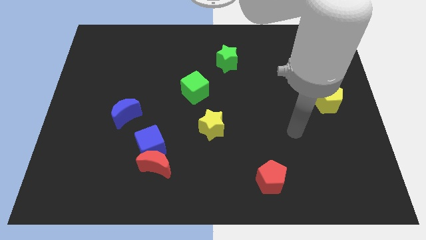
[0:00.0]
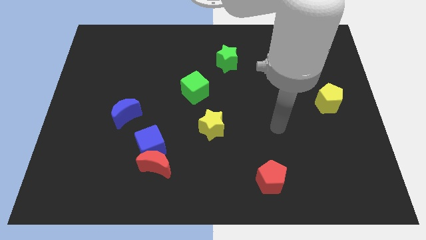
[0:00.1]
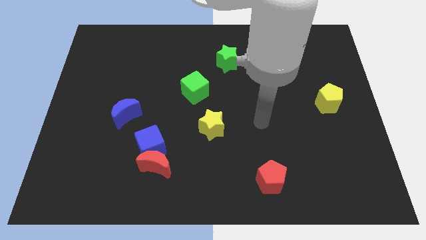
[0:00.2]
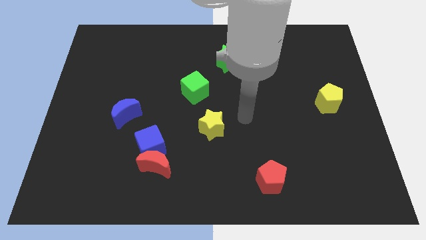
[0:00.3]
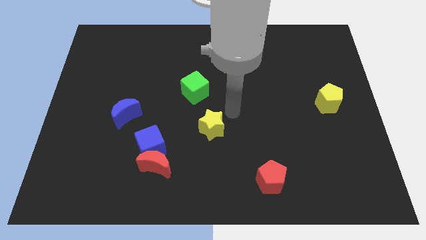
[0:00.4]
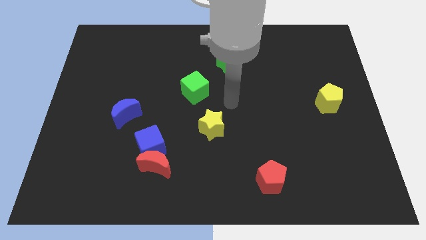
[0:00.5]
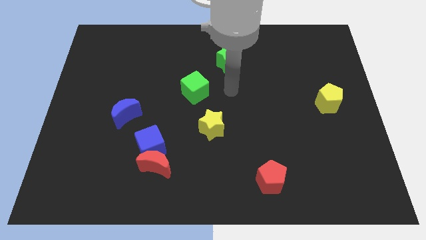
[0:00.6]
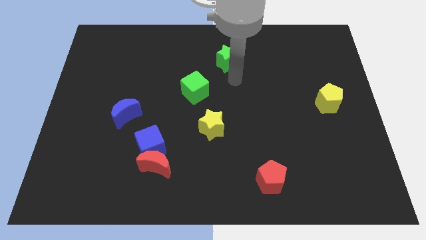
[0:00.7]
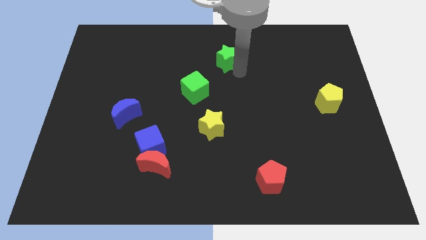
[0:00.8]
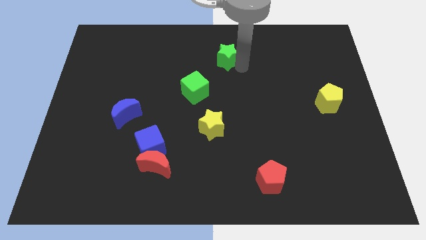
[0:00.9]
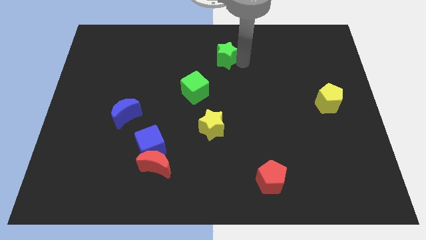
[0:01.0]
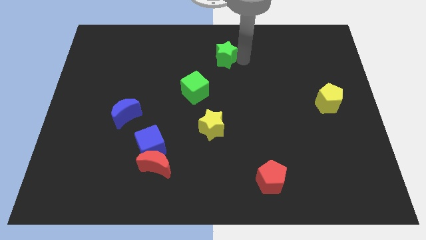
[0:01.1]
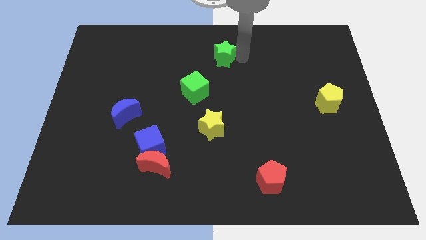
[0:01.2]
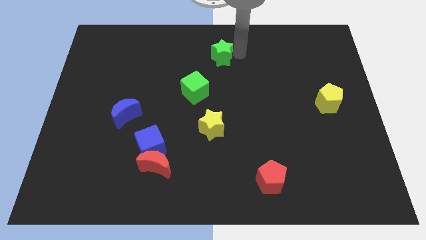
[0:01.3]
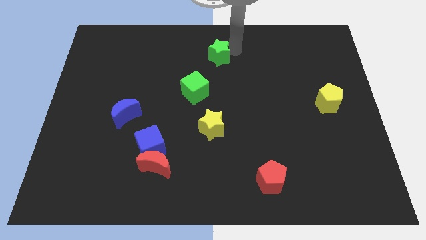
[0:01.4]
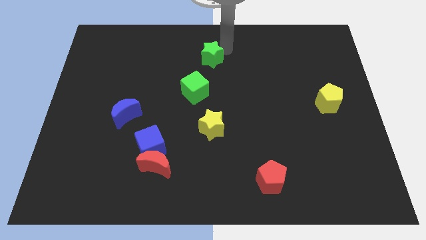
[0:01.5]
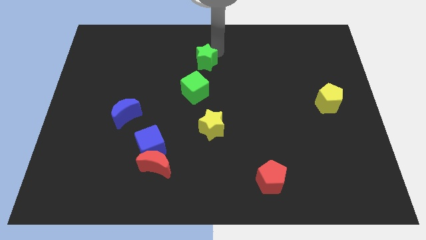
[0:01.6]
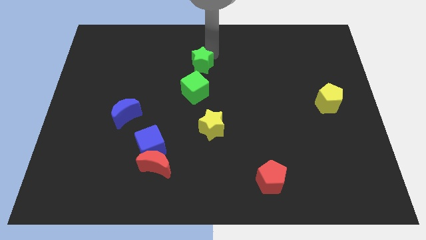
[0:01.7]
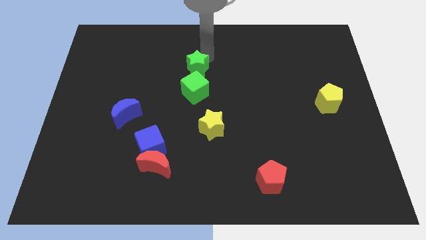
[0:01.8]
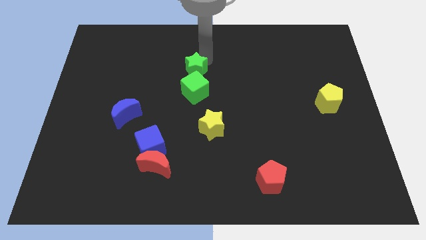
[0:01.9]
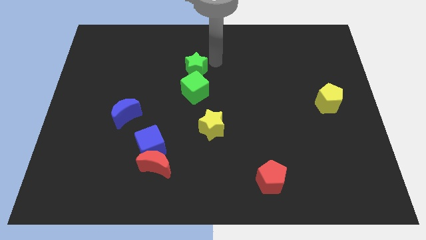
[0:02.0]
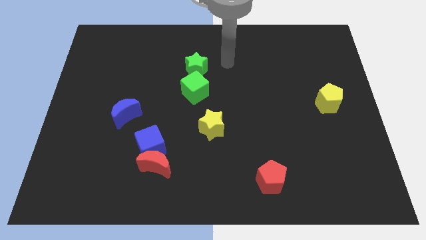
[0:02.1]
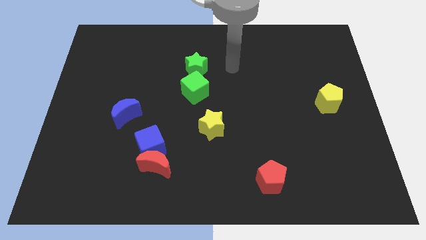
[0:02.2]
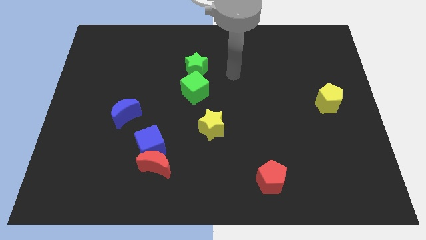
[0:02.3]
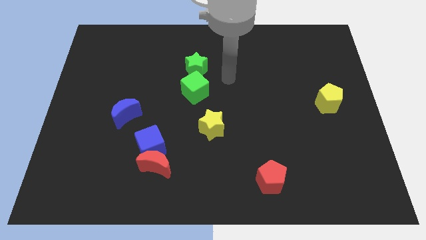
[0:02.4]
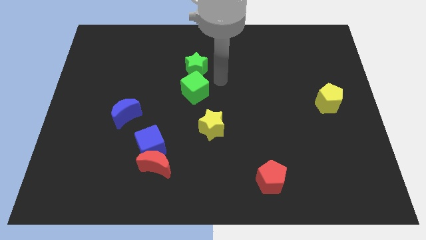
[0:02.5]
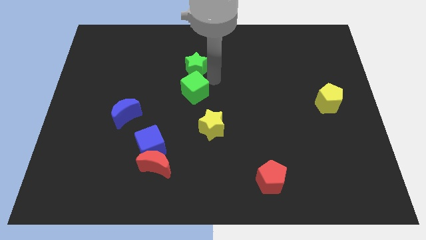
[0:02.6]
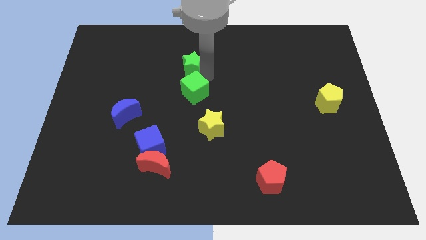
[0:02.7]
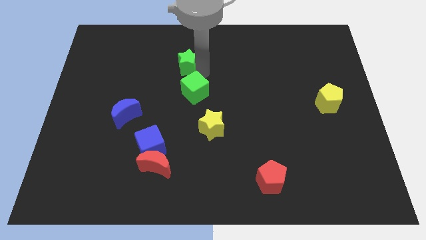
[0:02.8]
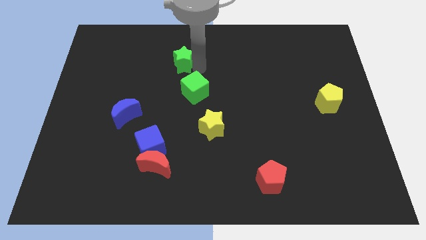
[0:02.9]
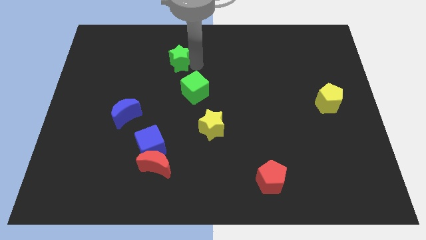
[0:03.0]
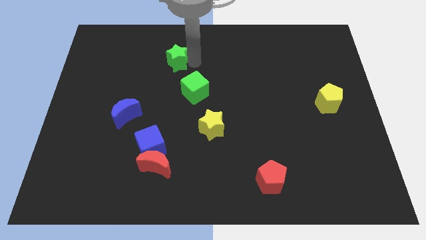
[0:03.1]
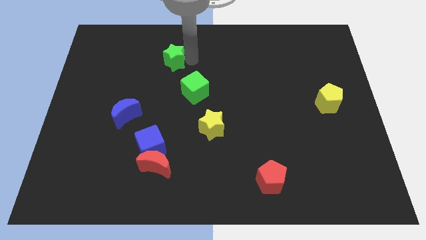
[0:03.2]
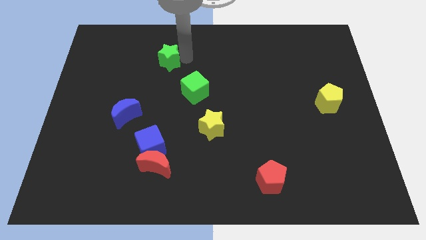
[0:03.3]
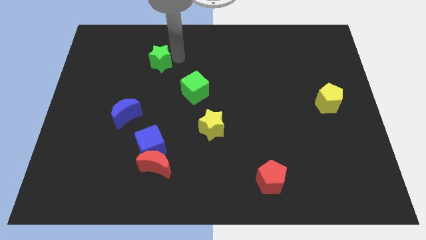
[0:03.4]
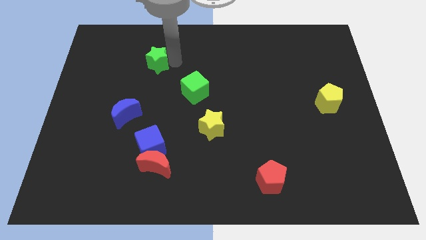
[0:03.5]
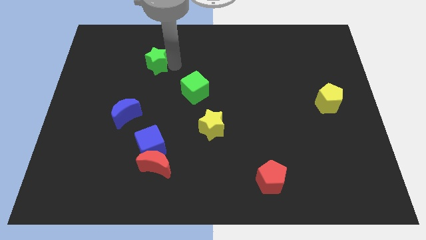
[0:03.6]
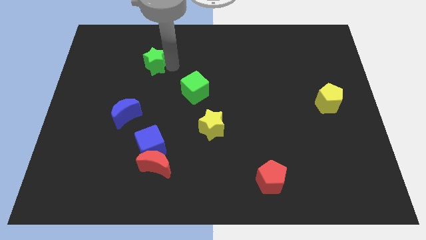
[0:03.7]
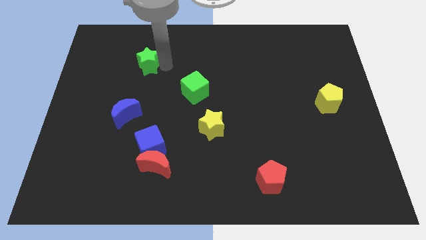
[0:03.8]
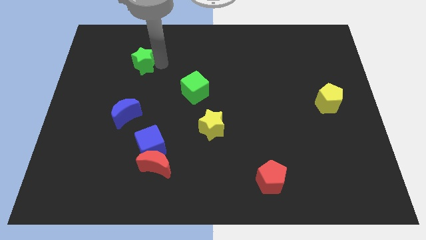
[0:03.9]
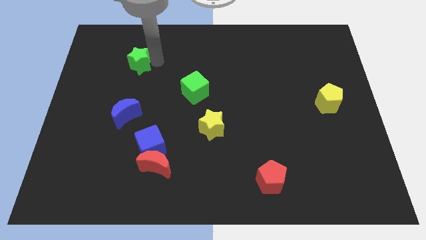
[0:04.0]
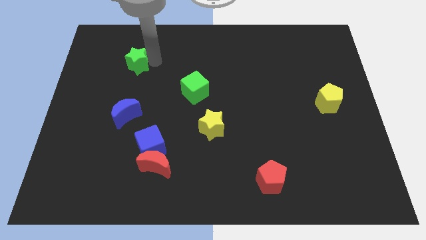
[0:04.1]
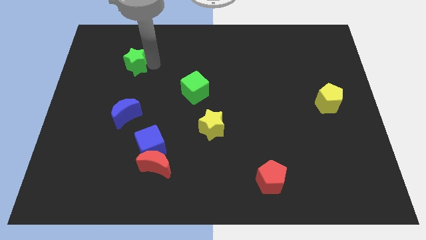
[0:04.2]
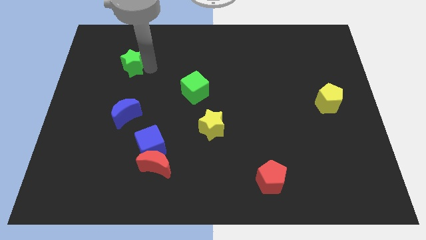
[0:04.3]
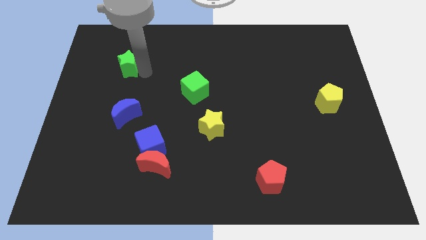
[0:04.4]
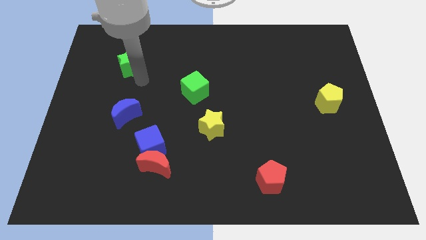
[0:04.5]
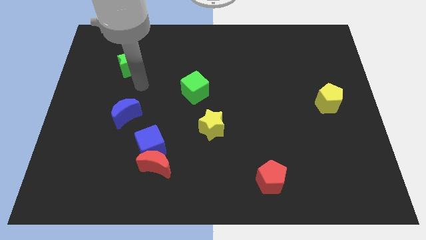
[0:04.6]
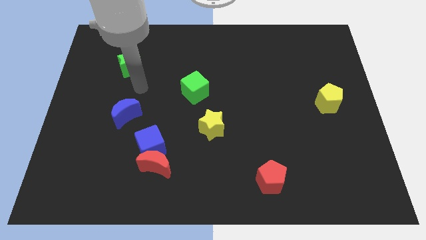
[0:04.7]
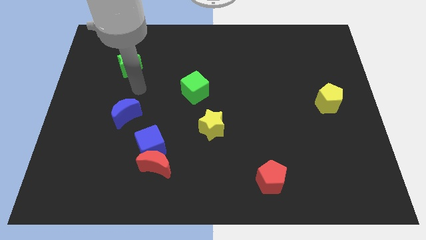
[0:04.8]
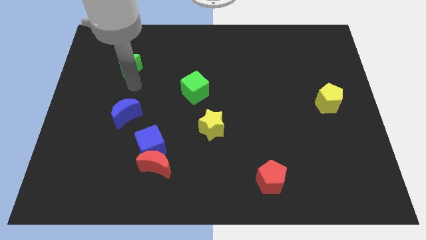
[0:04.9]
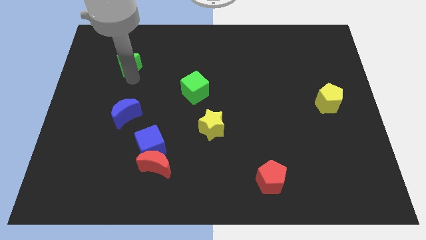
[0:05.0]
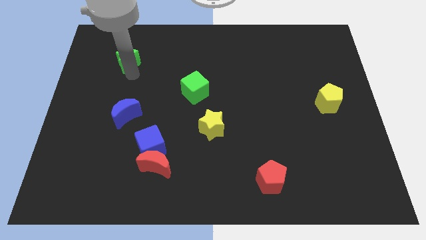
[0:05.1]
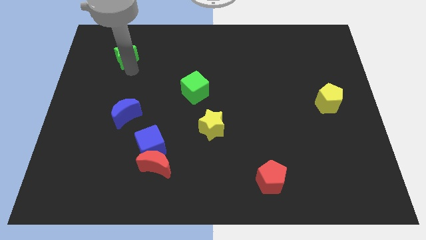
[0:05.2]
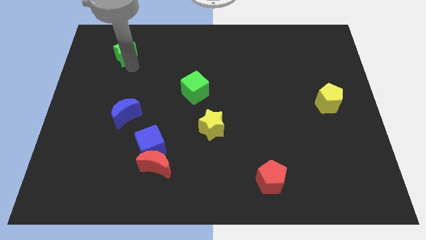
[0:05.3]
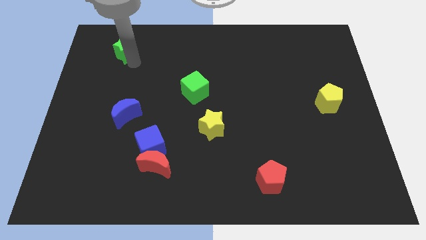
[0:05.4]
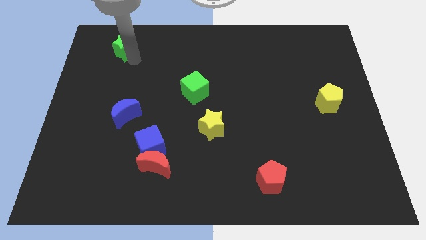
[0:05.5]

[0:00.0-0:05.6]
place the green star above the blue moon

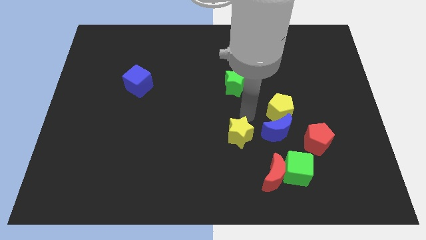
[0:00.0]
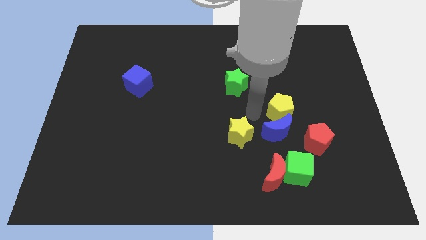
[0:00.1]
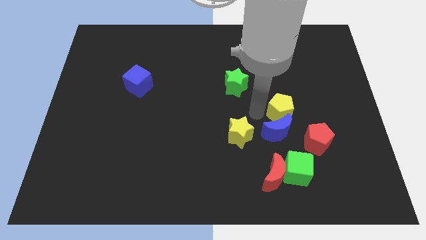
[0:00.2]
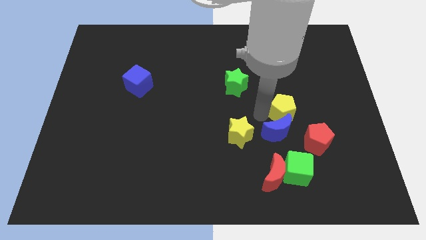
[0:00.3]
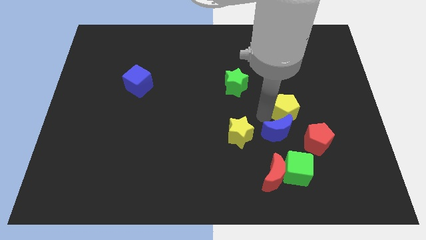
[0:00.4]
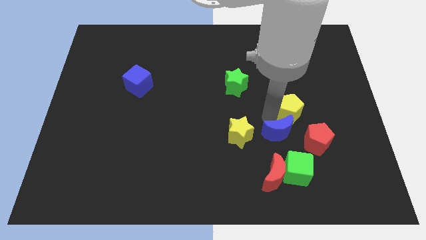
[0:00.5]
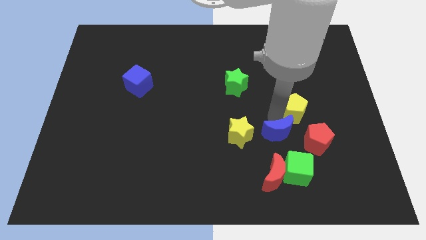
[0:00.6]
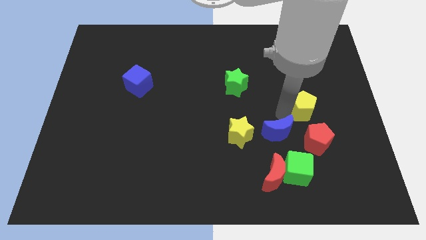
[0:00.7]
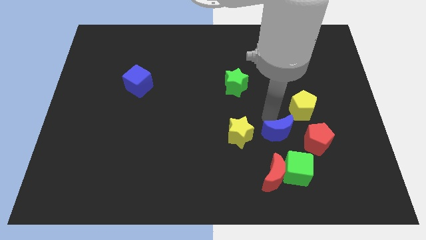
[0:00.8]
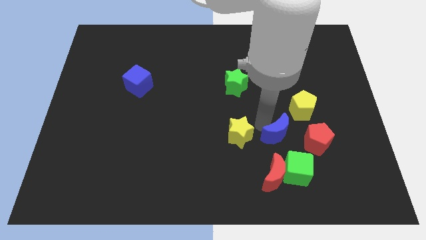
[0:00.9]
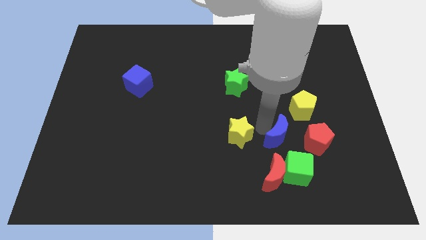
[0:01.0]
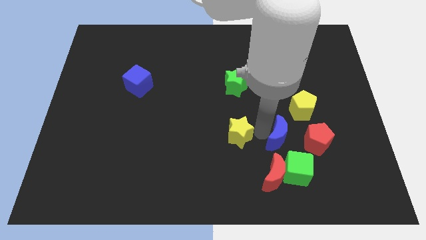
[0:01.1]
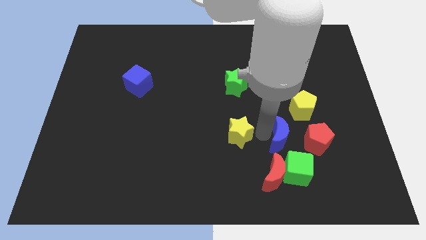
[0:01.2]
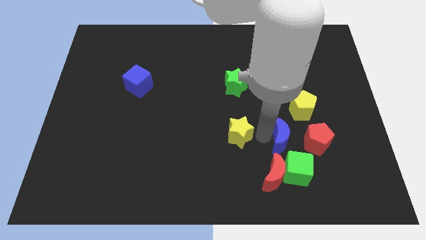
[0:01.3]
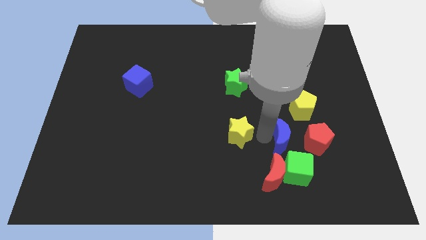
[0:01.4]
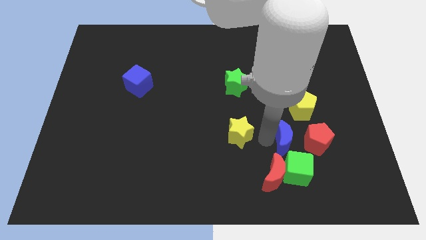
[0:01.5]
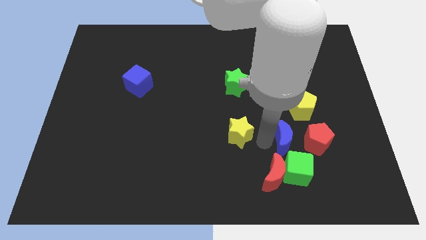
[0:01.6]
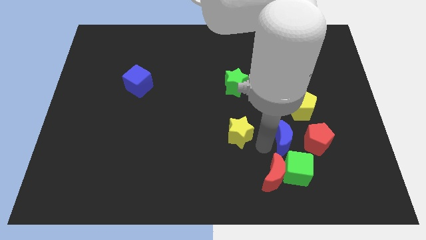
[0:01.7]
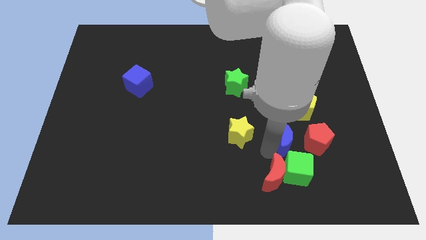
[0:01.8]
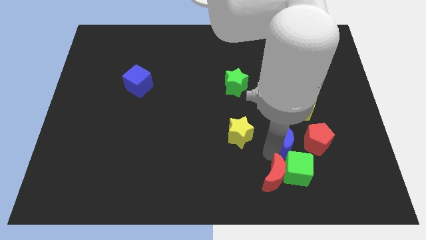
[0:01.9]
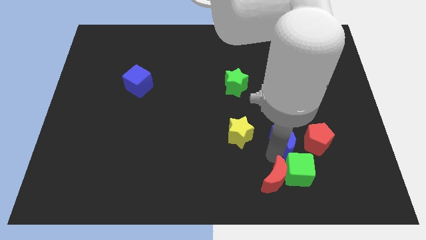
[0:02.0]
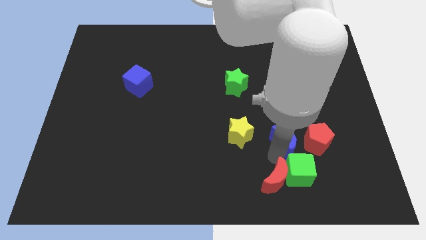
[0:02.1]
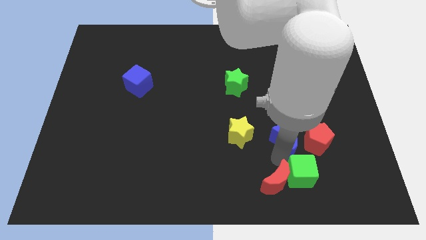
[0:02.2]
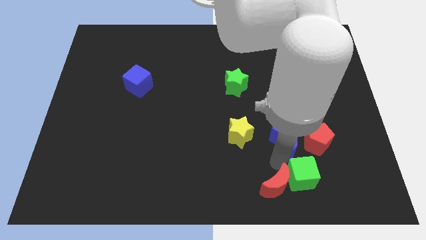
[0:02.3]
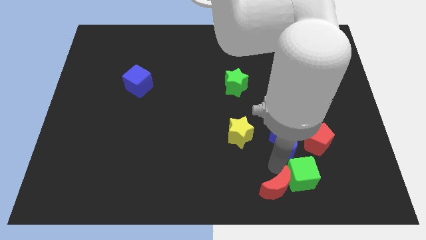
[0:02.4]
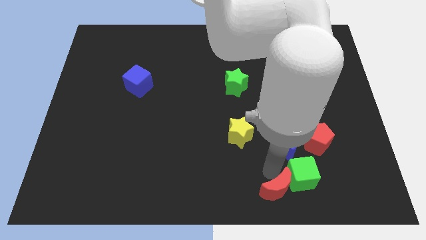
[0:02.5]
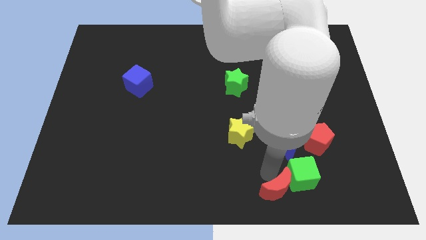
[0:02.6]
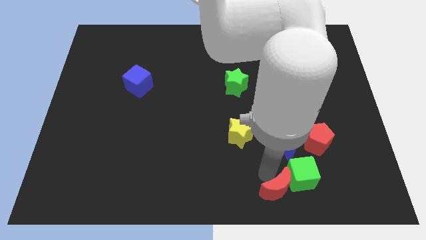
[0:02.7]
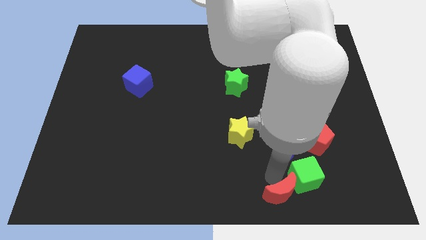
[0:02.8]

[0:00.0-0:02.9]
separate yellow pentagon blue moon red moon from group of blocks

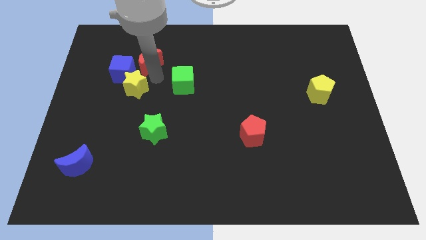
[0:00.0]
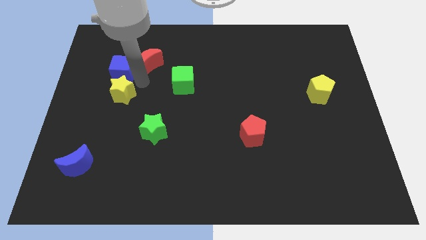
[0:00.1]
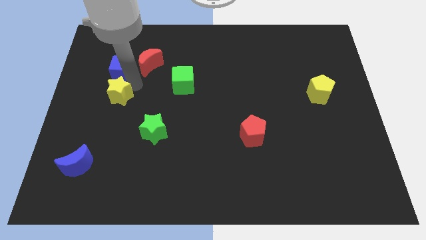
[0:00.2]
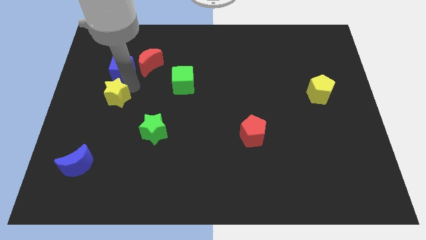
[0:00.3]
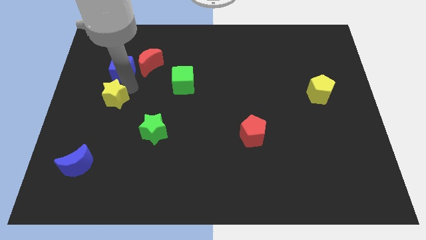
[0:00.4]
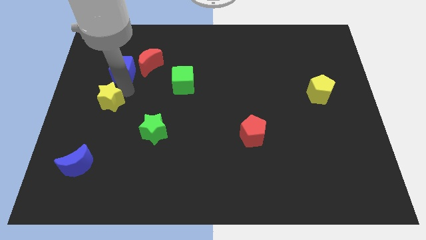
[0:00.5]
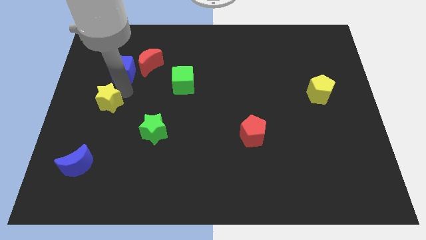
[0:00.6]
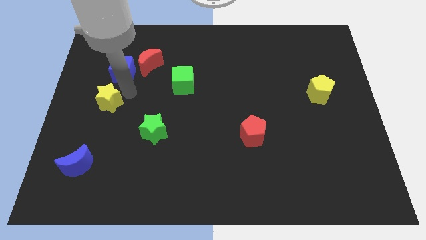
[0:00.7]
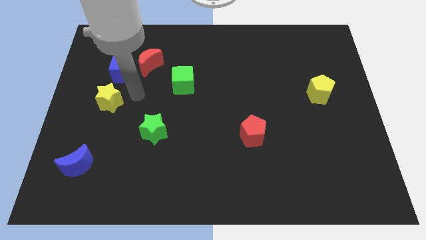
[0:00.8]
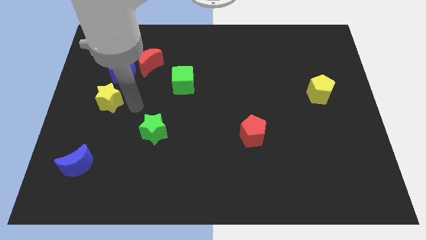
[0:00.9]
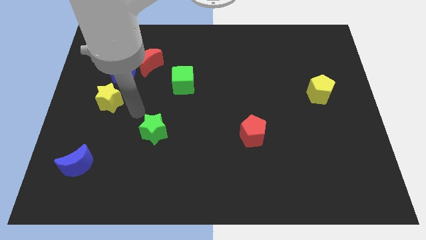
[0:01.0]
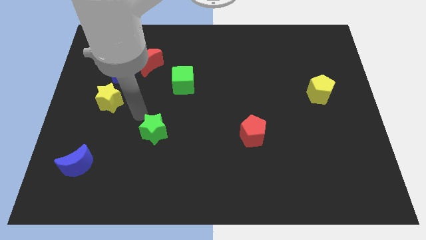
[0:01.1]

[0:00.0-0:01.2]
slightly push the yellow star towards the left of the board
